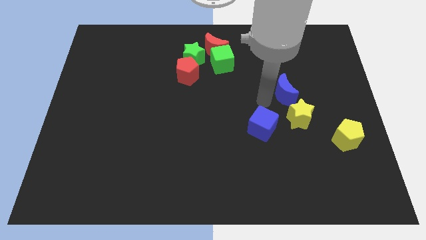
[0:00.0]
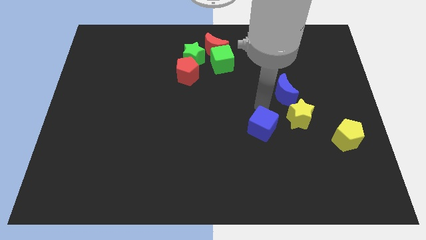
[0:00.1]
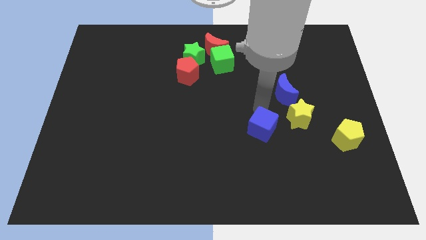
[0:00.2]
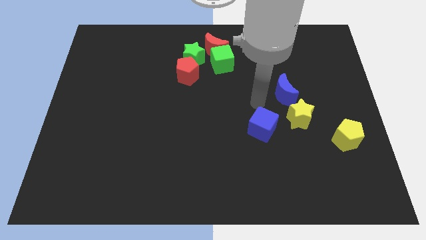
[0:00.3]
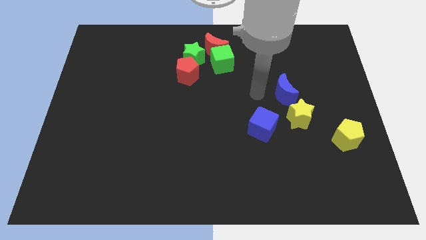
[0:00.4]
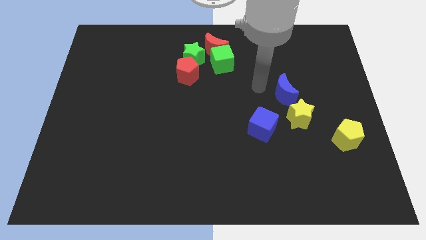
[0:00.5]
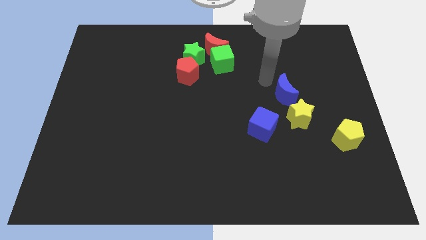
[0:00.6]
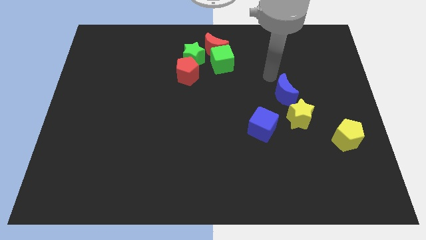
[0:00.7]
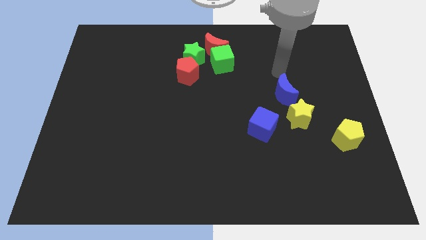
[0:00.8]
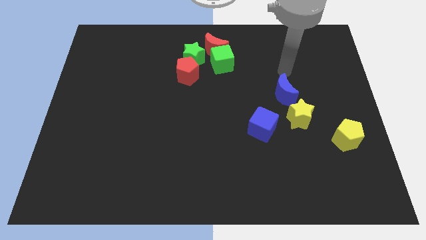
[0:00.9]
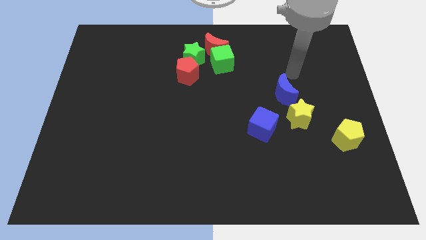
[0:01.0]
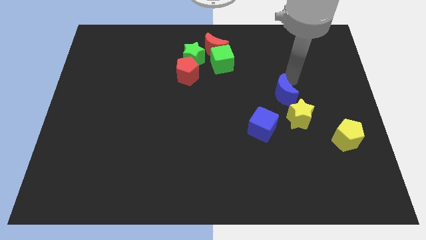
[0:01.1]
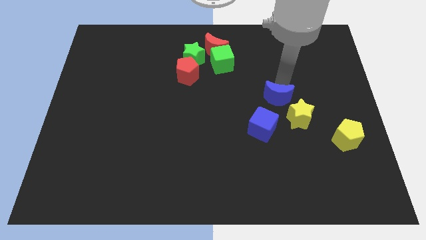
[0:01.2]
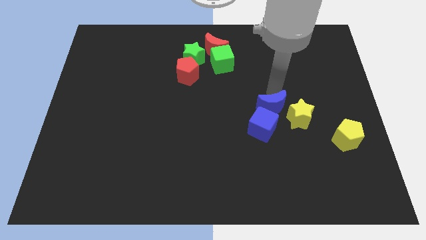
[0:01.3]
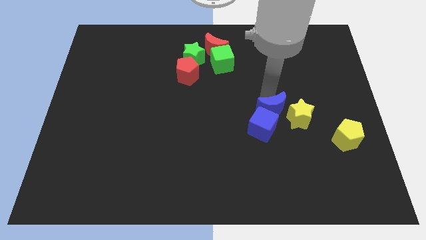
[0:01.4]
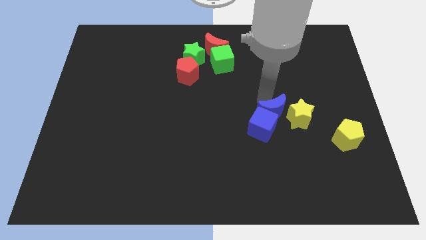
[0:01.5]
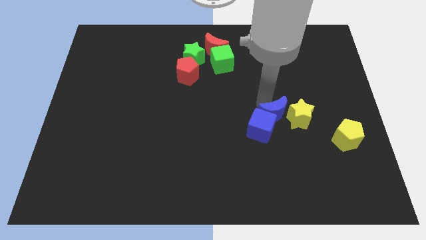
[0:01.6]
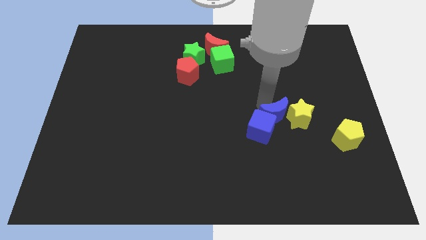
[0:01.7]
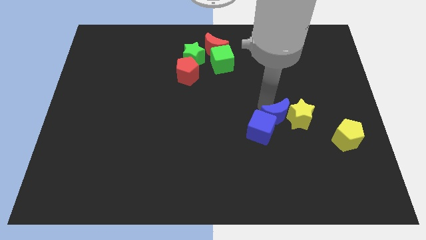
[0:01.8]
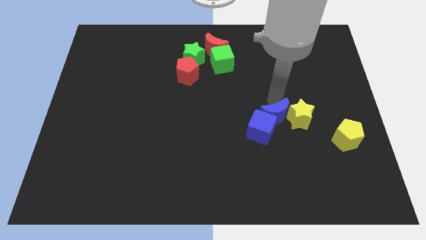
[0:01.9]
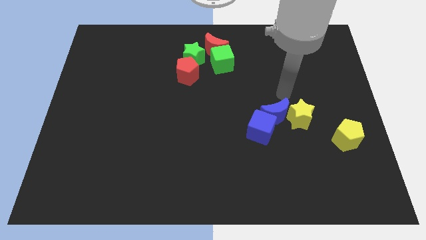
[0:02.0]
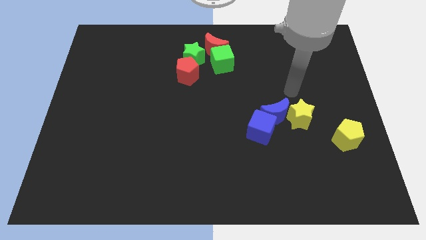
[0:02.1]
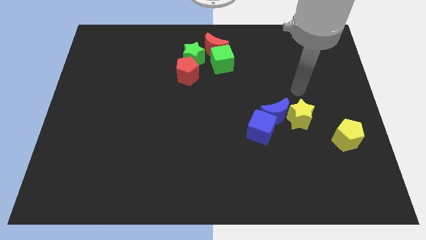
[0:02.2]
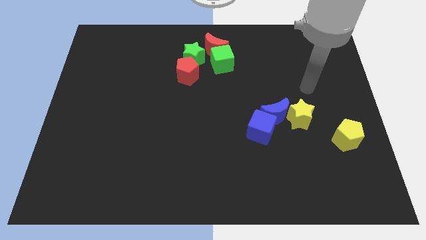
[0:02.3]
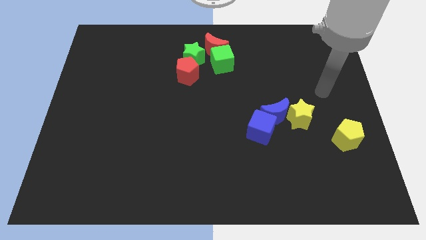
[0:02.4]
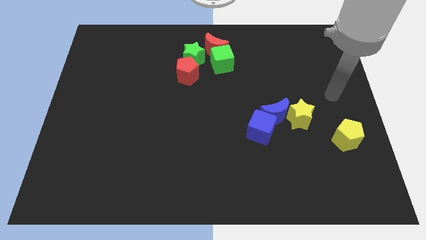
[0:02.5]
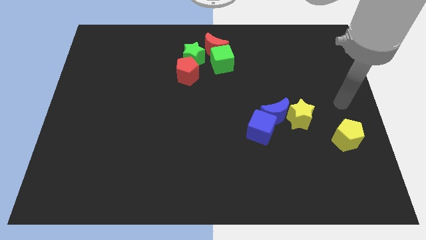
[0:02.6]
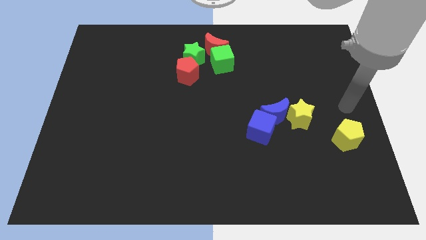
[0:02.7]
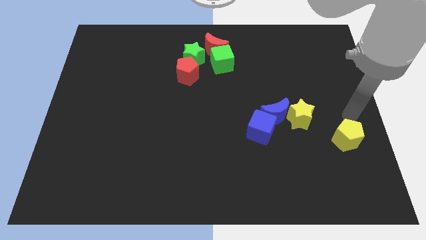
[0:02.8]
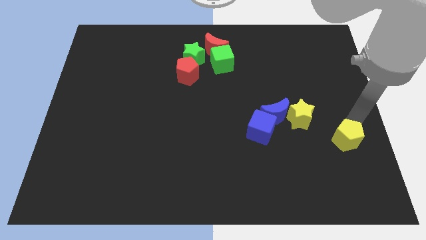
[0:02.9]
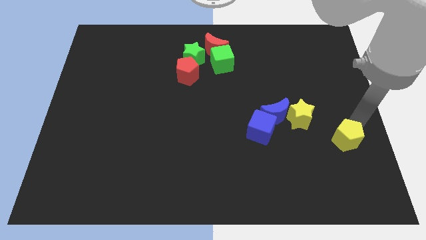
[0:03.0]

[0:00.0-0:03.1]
move the blue moon into the blue cube

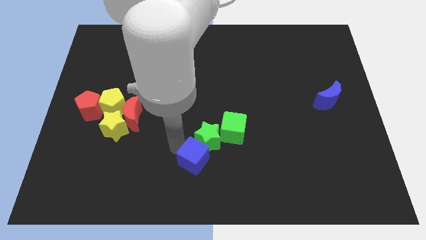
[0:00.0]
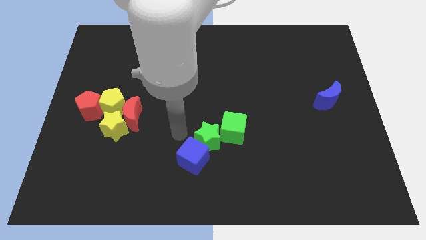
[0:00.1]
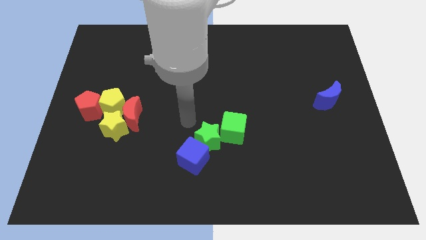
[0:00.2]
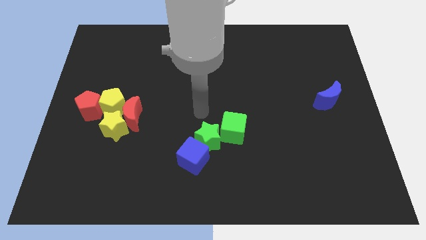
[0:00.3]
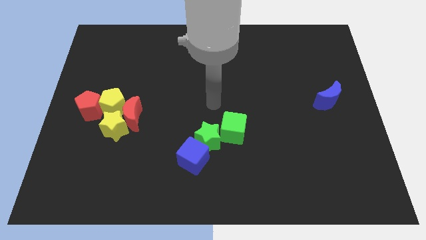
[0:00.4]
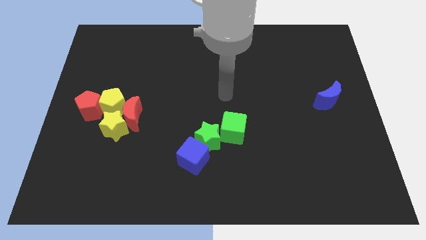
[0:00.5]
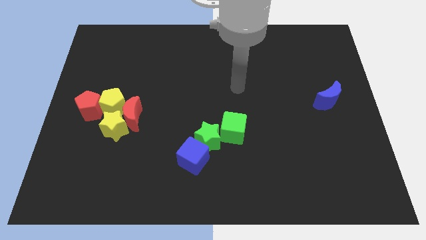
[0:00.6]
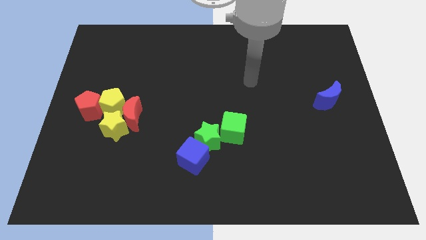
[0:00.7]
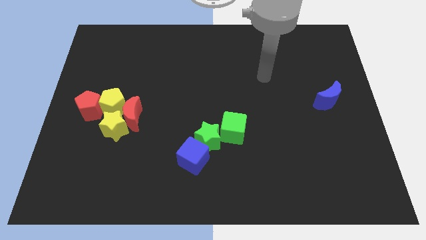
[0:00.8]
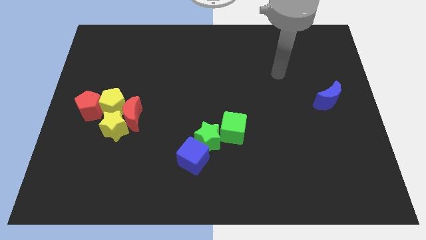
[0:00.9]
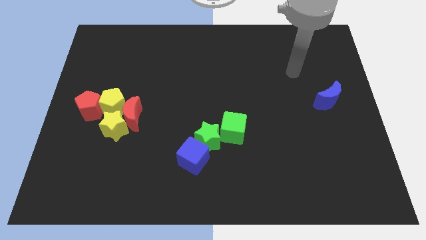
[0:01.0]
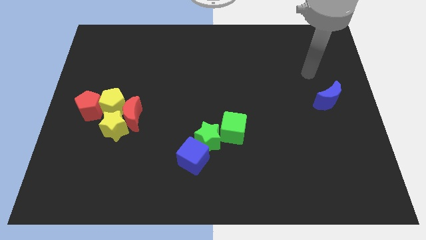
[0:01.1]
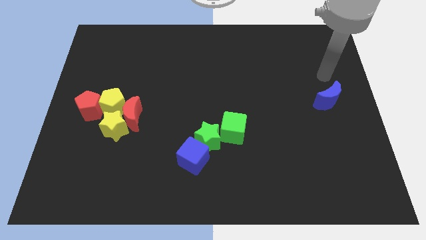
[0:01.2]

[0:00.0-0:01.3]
point your arm at the top of blue moon

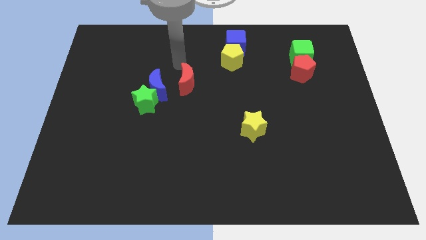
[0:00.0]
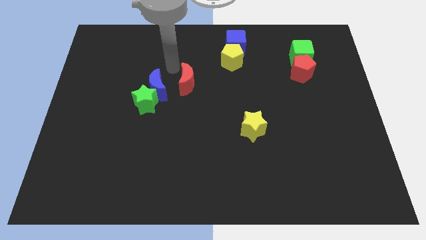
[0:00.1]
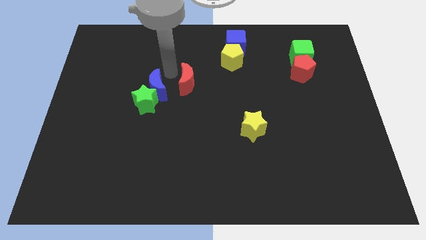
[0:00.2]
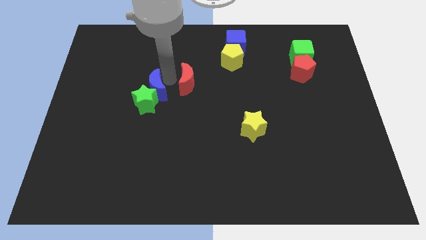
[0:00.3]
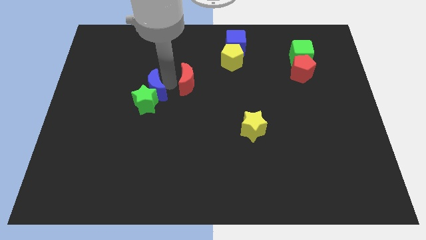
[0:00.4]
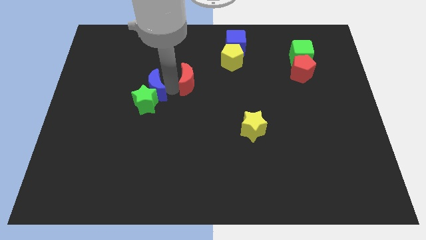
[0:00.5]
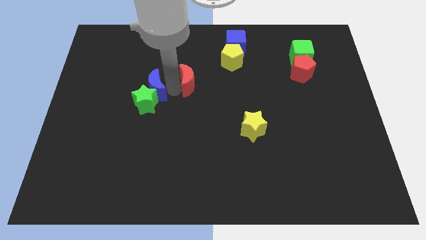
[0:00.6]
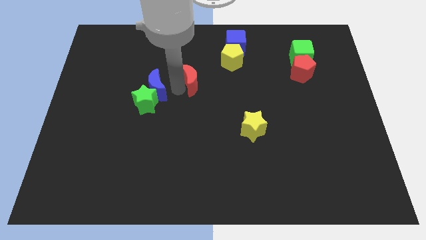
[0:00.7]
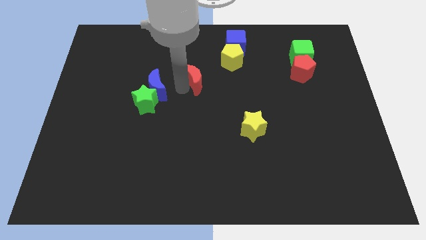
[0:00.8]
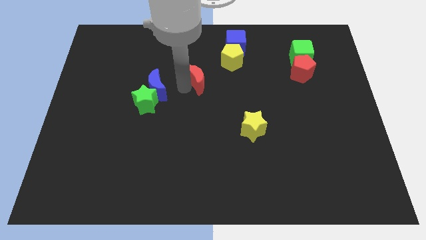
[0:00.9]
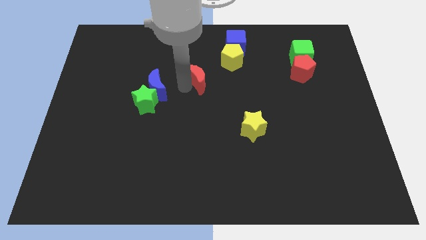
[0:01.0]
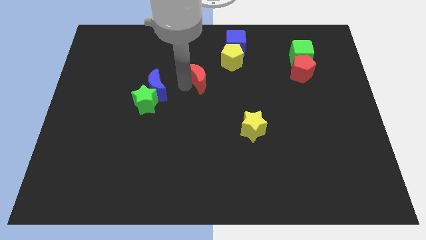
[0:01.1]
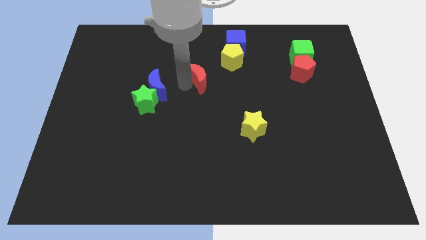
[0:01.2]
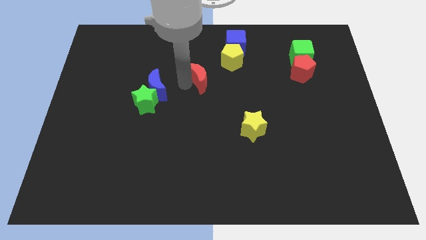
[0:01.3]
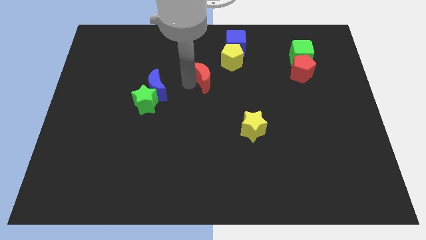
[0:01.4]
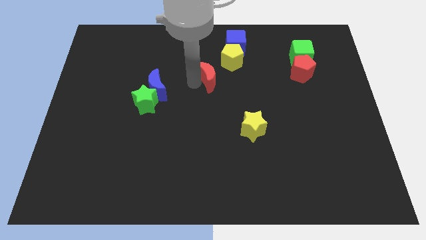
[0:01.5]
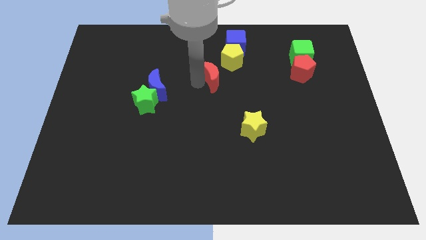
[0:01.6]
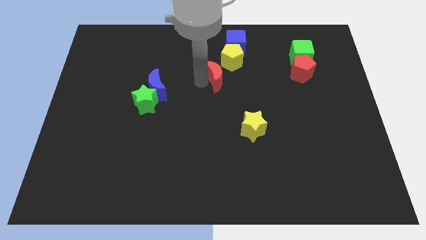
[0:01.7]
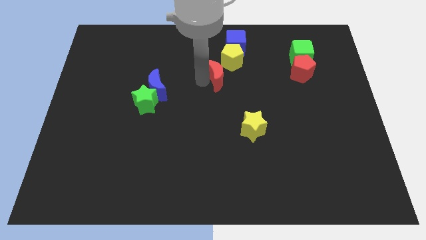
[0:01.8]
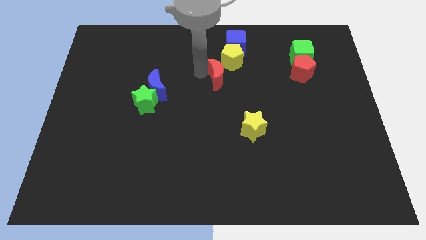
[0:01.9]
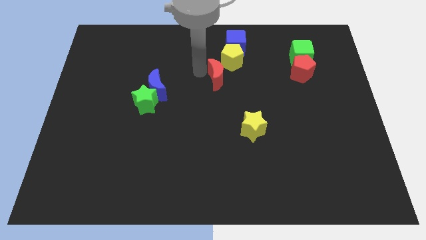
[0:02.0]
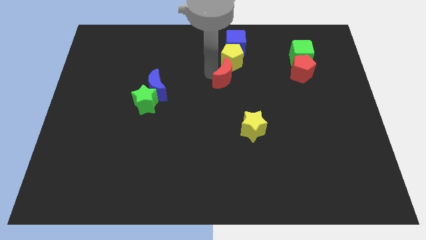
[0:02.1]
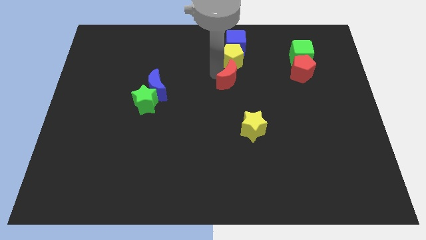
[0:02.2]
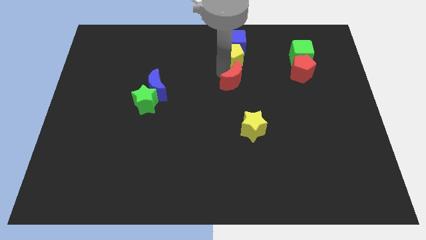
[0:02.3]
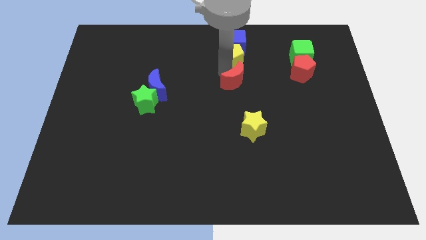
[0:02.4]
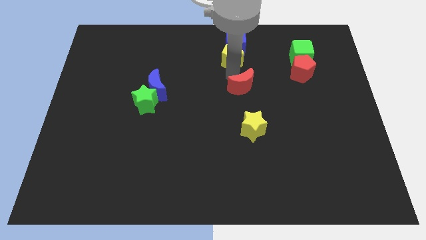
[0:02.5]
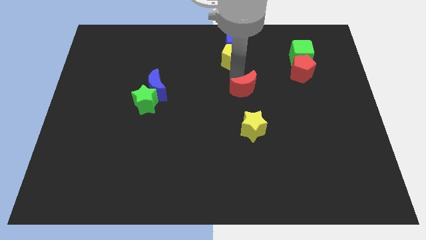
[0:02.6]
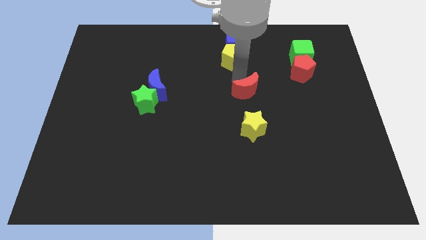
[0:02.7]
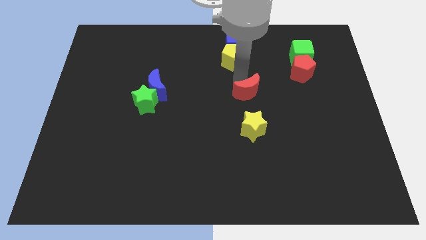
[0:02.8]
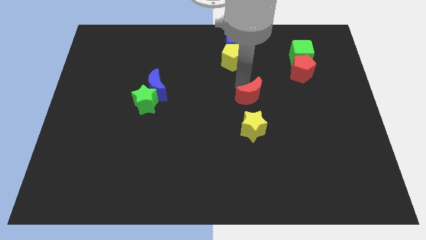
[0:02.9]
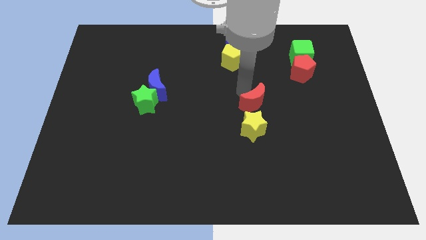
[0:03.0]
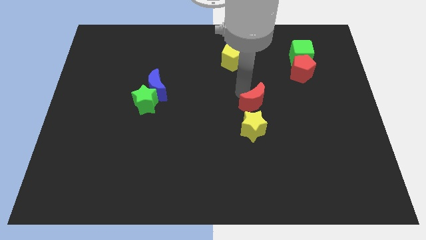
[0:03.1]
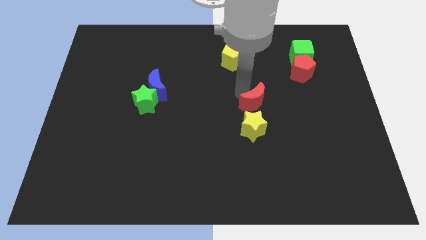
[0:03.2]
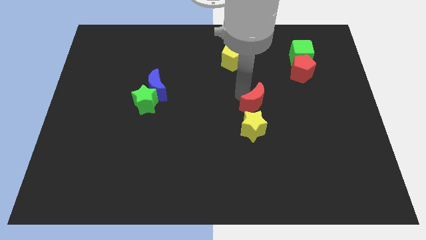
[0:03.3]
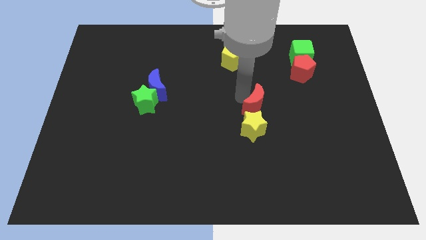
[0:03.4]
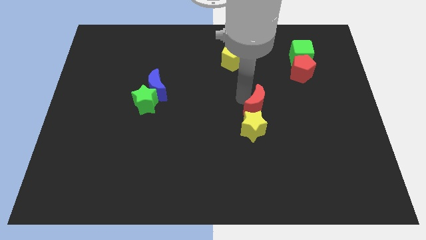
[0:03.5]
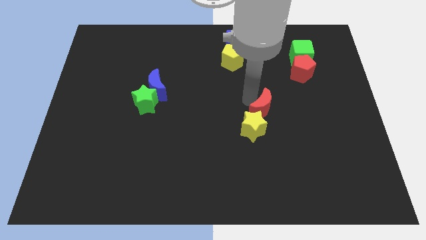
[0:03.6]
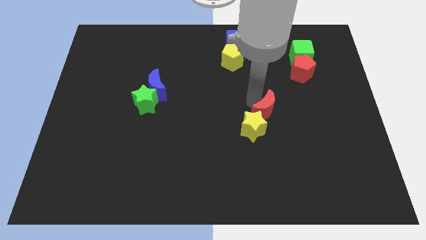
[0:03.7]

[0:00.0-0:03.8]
move the red crescent close to the yellow star

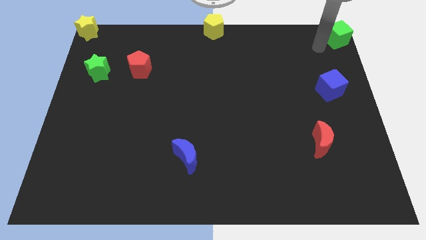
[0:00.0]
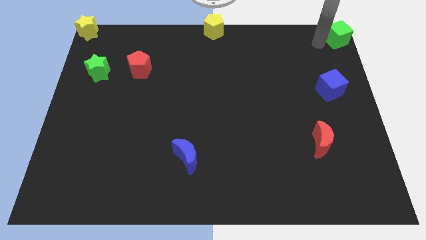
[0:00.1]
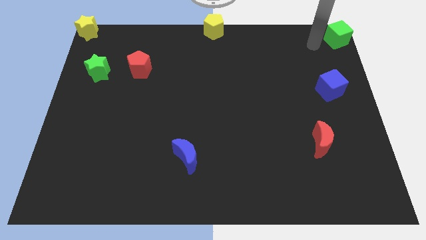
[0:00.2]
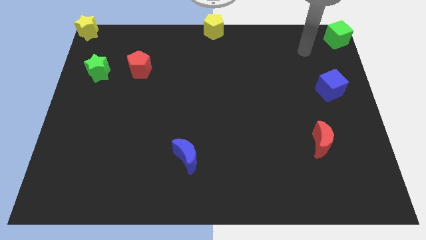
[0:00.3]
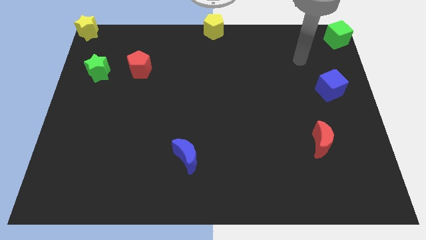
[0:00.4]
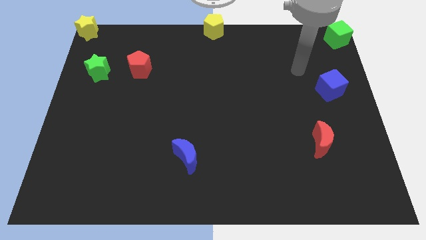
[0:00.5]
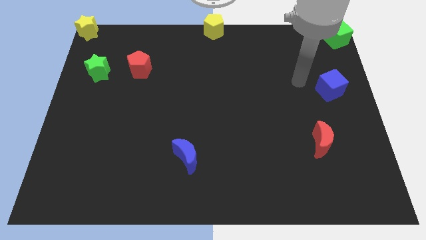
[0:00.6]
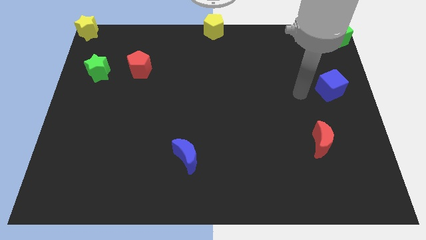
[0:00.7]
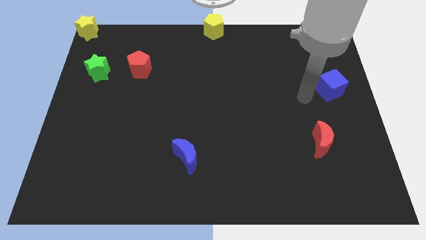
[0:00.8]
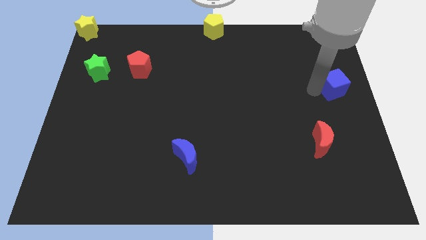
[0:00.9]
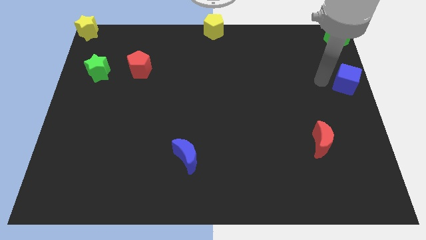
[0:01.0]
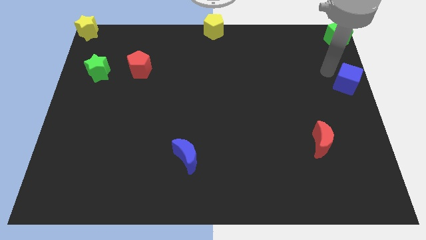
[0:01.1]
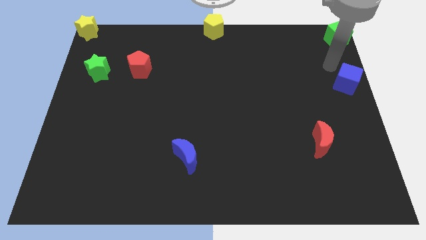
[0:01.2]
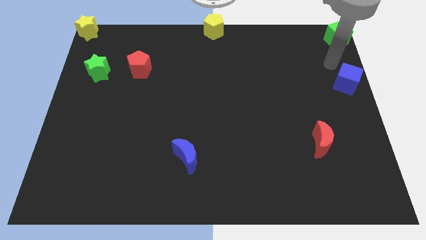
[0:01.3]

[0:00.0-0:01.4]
move blue cube to the right end of the board
